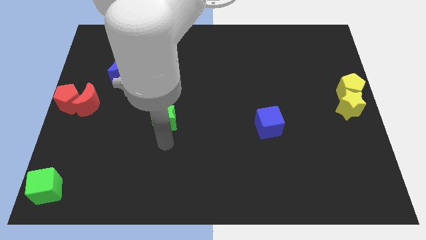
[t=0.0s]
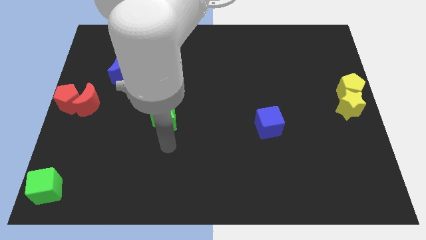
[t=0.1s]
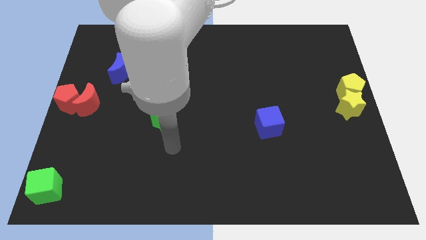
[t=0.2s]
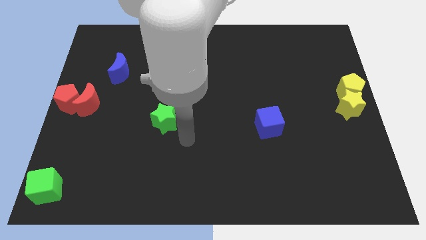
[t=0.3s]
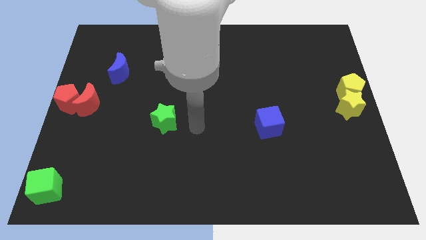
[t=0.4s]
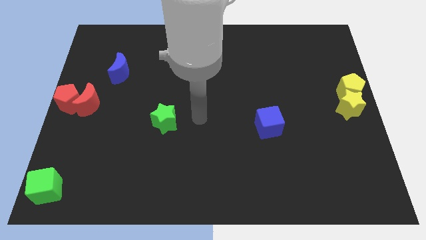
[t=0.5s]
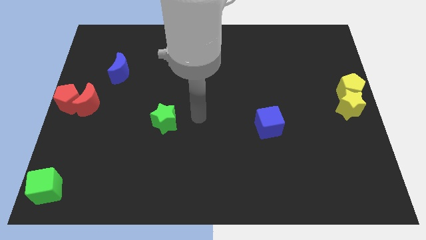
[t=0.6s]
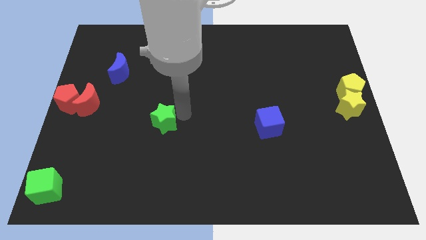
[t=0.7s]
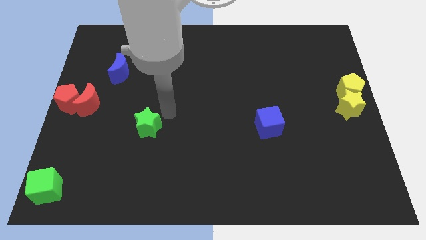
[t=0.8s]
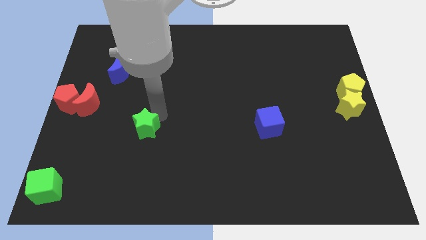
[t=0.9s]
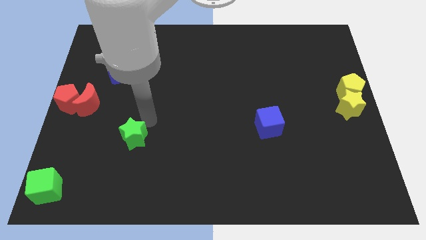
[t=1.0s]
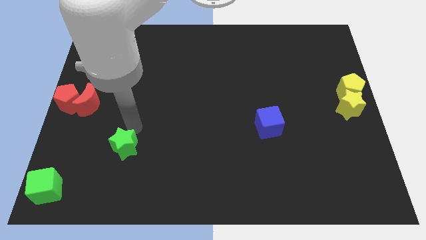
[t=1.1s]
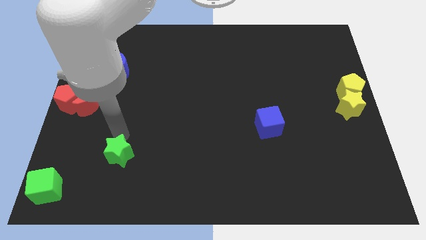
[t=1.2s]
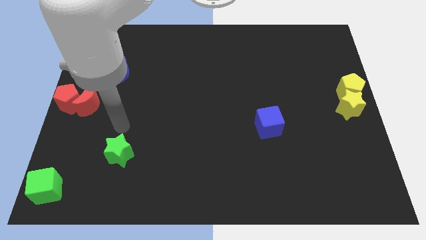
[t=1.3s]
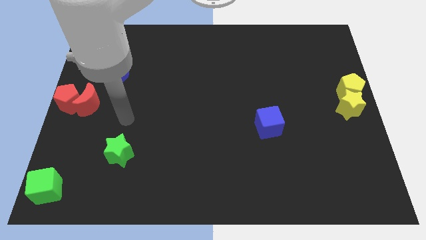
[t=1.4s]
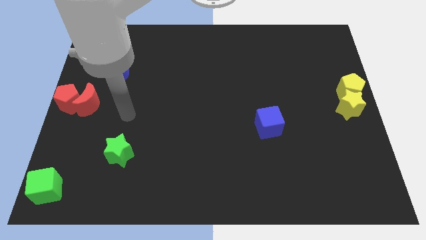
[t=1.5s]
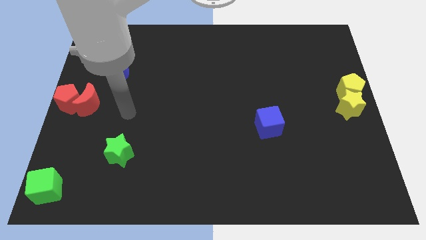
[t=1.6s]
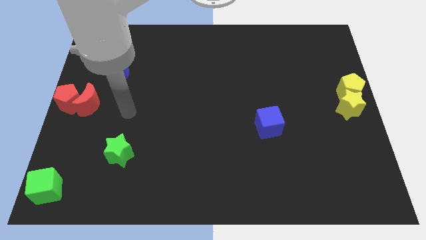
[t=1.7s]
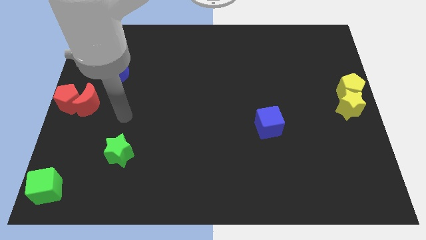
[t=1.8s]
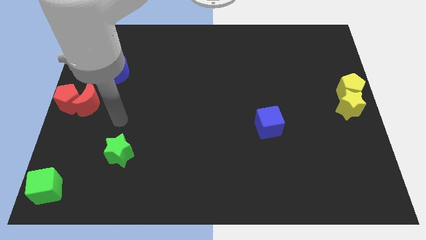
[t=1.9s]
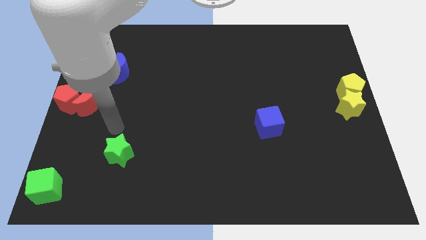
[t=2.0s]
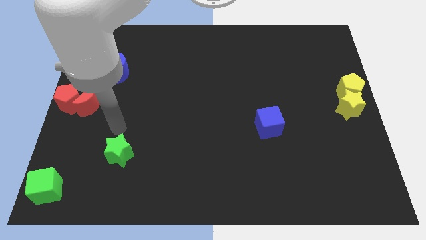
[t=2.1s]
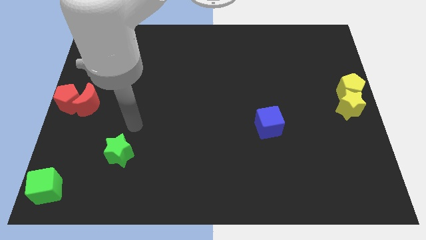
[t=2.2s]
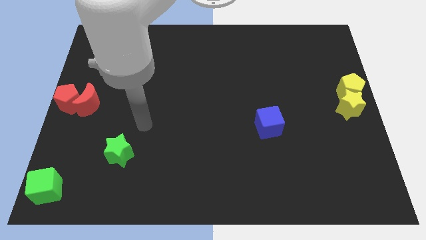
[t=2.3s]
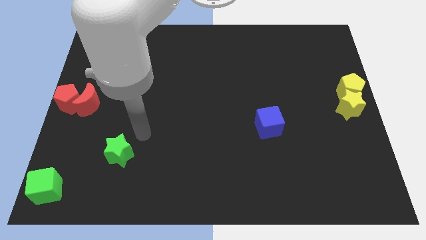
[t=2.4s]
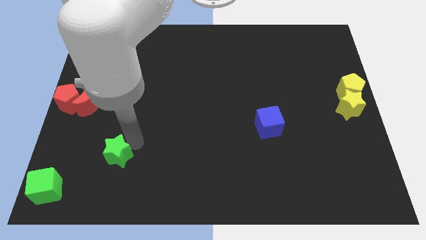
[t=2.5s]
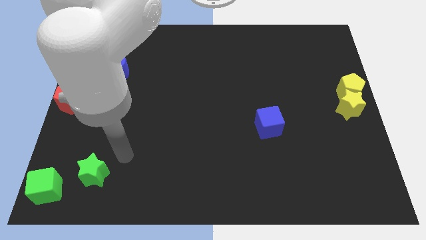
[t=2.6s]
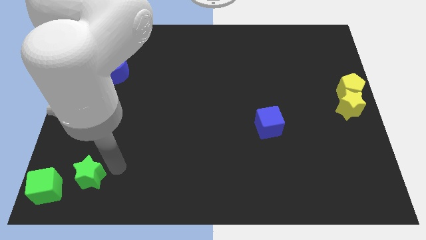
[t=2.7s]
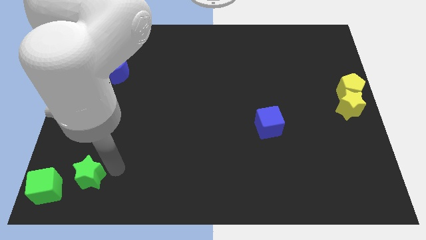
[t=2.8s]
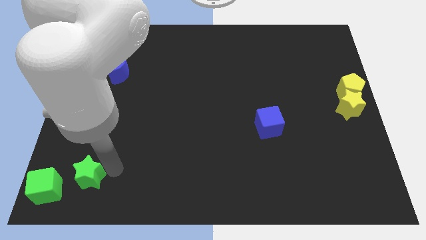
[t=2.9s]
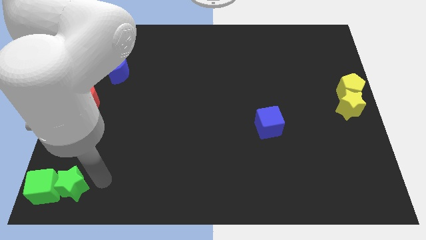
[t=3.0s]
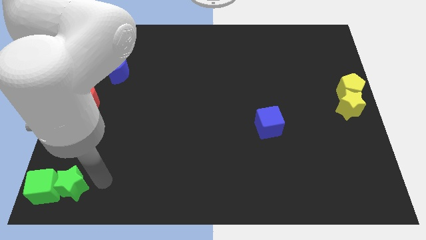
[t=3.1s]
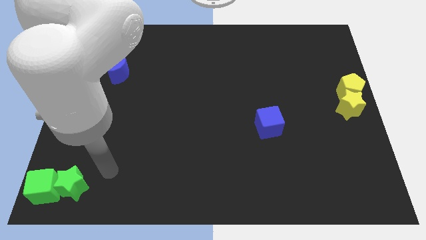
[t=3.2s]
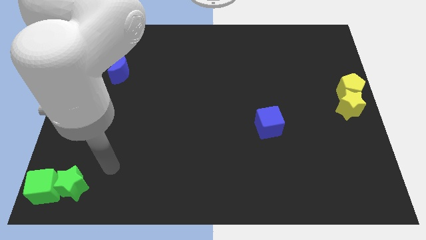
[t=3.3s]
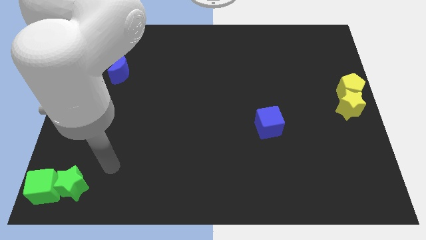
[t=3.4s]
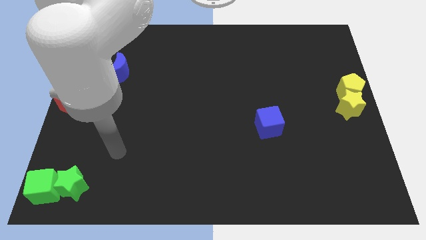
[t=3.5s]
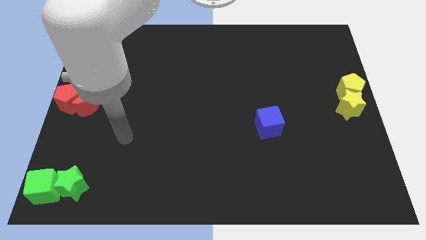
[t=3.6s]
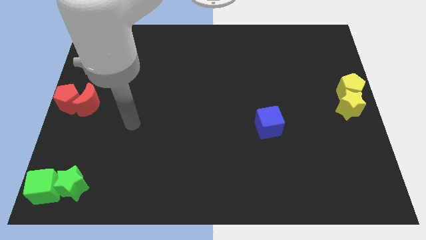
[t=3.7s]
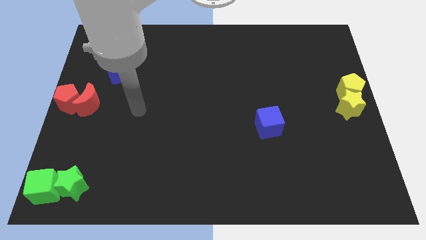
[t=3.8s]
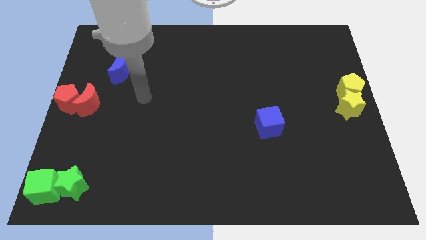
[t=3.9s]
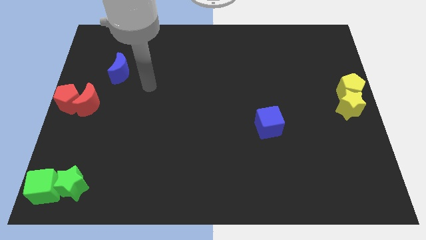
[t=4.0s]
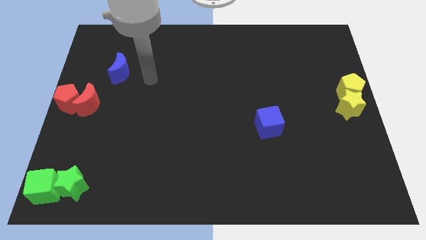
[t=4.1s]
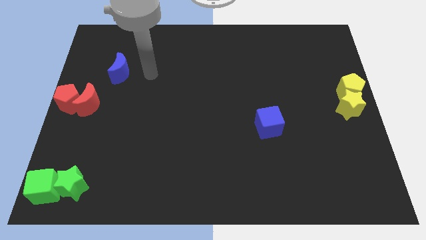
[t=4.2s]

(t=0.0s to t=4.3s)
place the green star into green cube

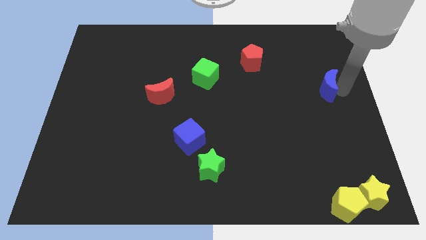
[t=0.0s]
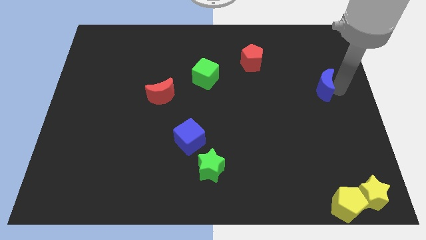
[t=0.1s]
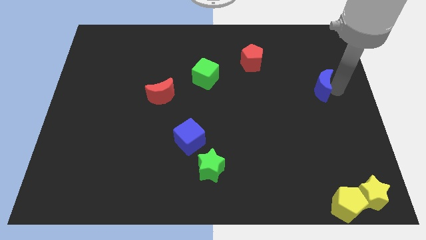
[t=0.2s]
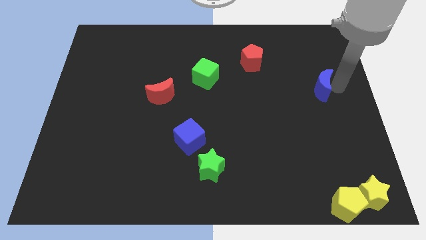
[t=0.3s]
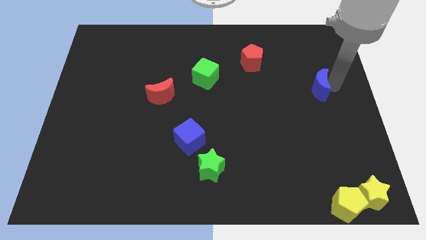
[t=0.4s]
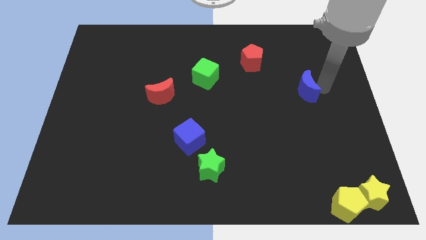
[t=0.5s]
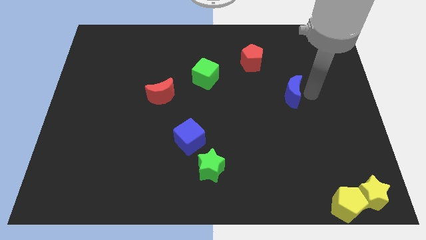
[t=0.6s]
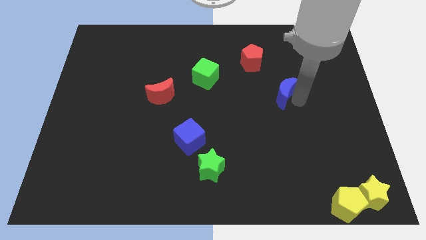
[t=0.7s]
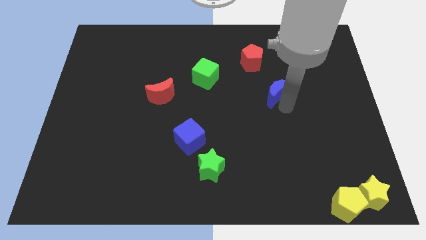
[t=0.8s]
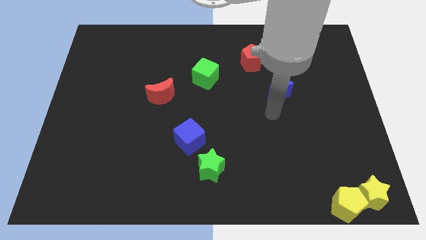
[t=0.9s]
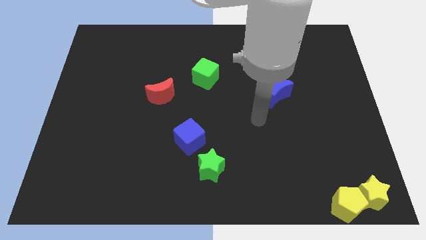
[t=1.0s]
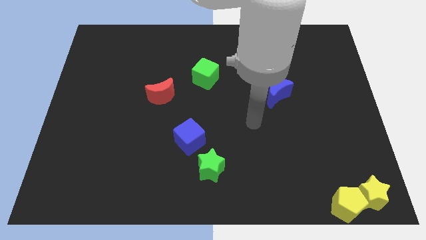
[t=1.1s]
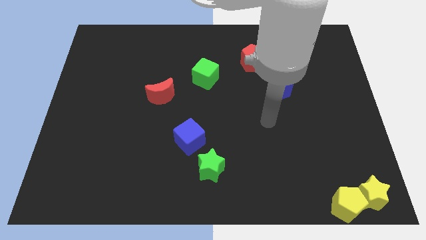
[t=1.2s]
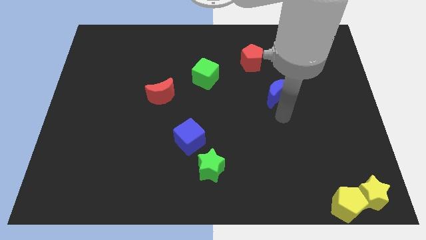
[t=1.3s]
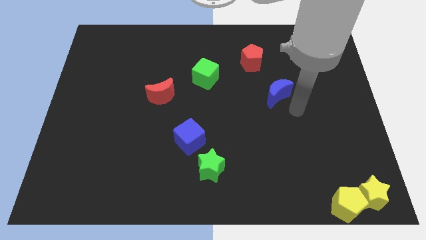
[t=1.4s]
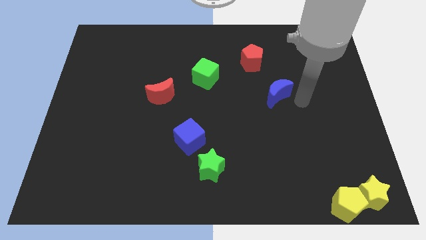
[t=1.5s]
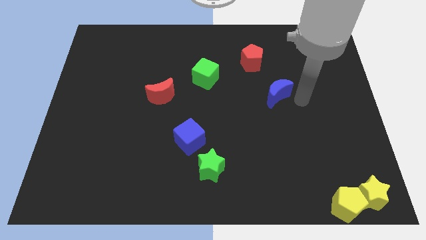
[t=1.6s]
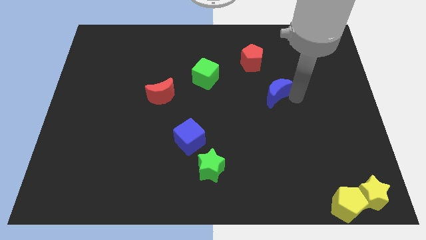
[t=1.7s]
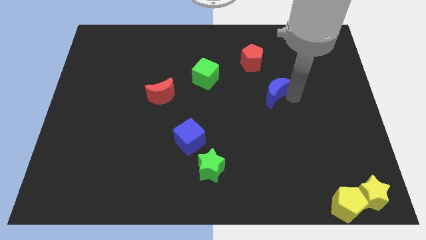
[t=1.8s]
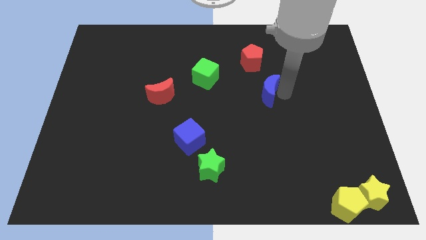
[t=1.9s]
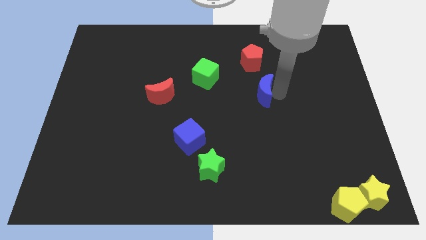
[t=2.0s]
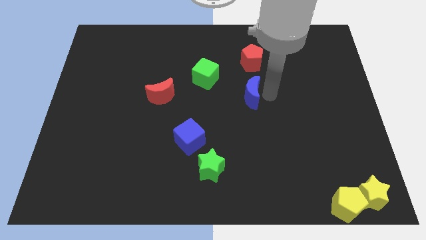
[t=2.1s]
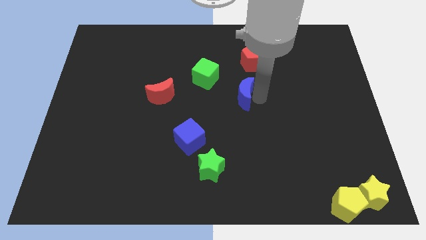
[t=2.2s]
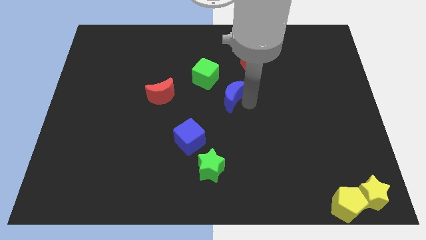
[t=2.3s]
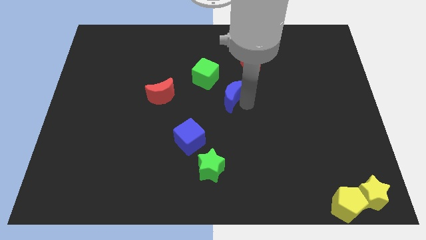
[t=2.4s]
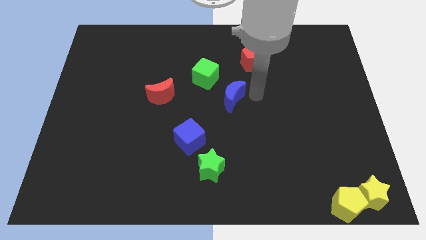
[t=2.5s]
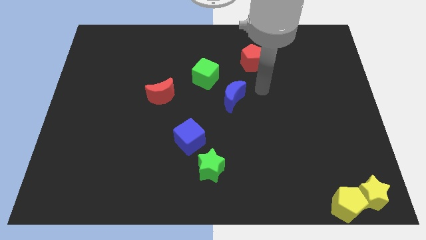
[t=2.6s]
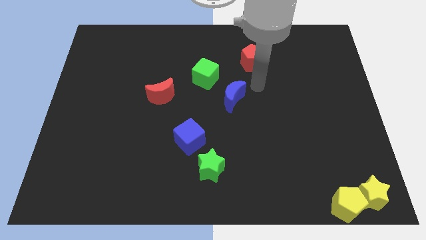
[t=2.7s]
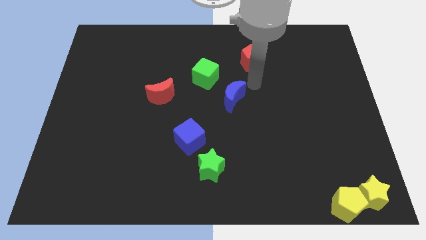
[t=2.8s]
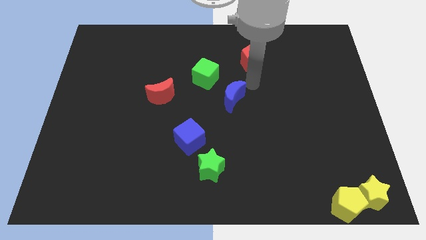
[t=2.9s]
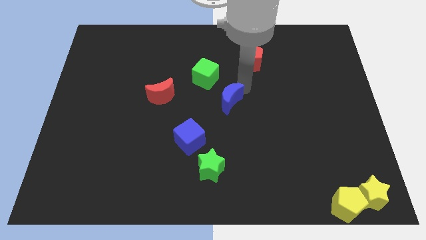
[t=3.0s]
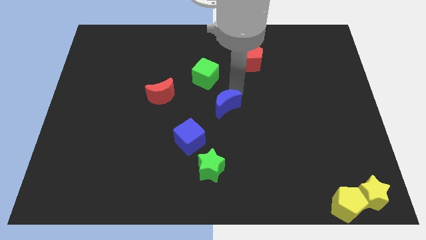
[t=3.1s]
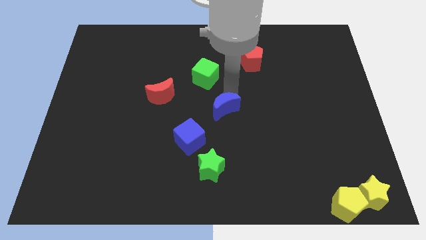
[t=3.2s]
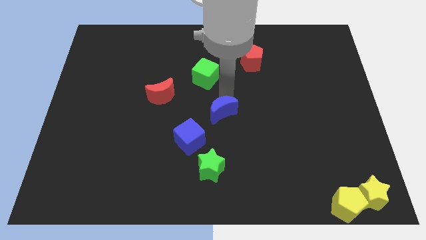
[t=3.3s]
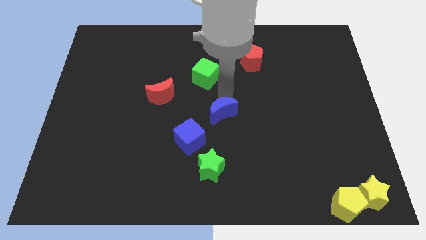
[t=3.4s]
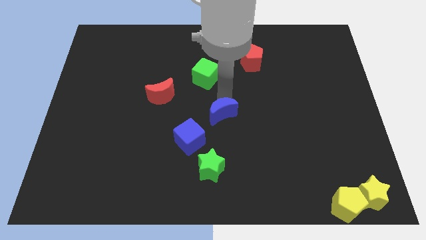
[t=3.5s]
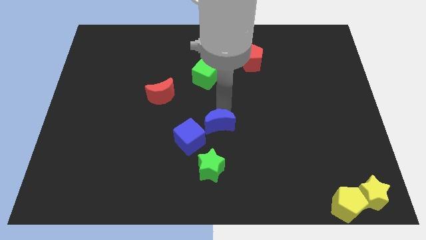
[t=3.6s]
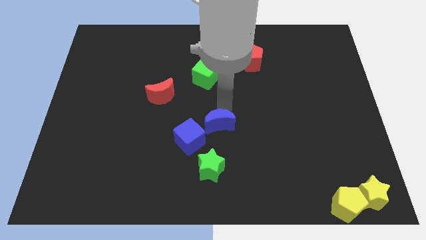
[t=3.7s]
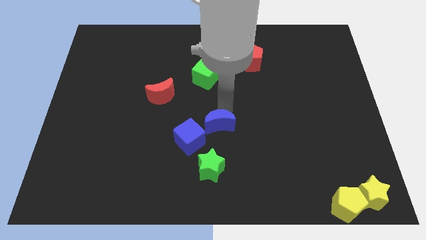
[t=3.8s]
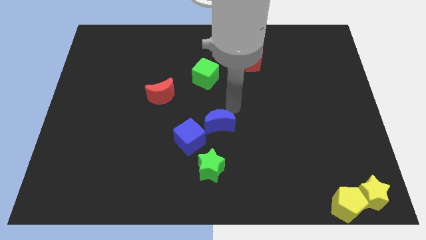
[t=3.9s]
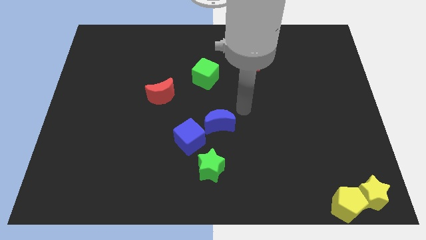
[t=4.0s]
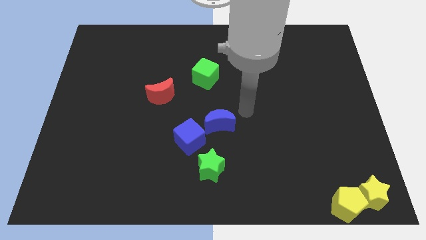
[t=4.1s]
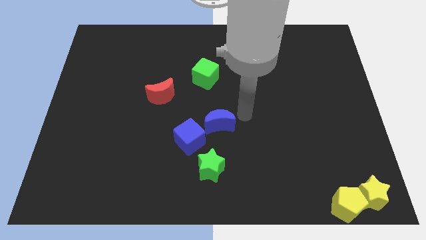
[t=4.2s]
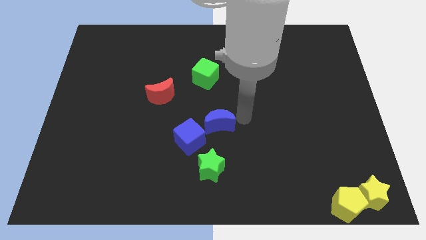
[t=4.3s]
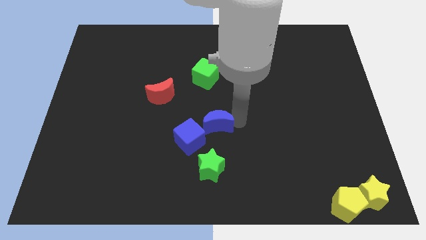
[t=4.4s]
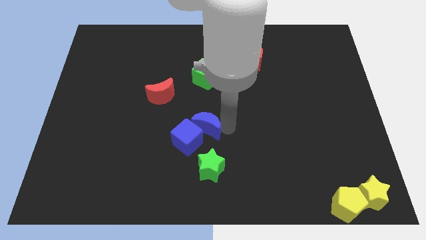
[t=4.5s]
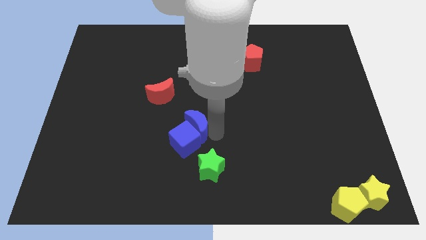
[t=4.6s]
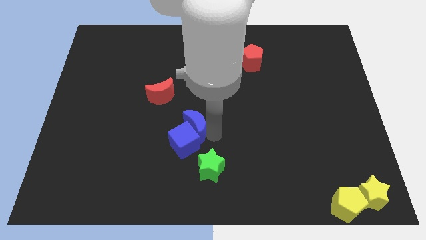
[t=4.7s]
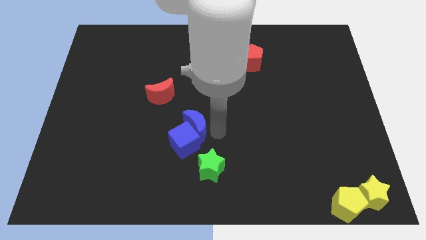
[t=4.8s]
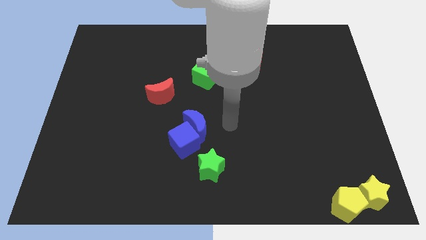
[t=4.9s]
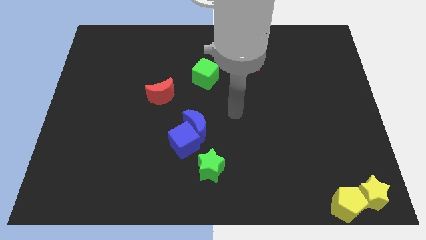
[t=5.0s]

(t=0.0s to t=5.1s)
move blue moon into blue cube
